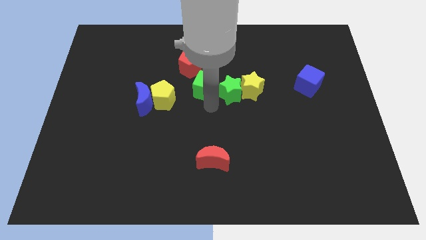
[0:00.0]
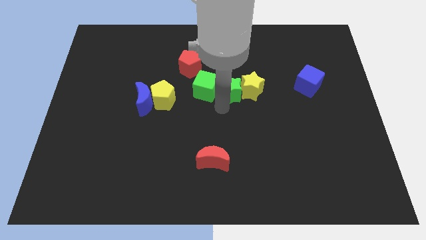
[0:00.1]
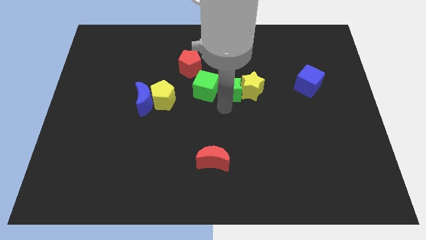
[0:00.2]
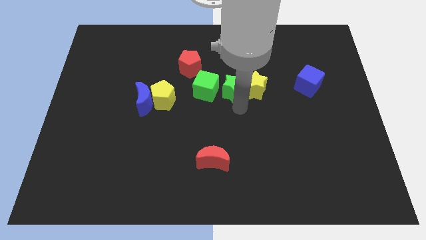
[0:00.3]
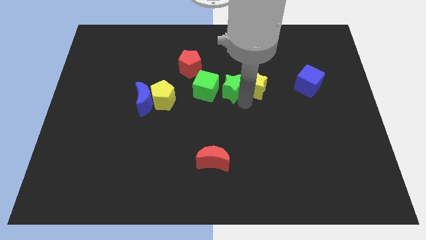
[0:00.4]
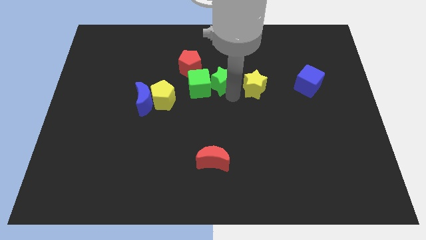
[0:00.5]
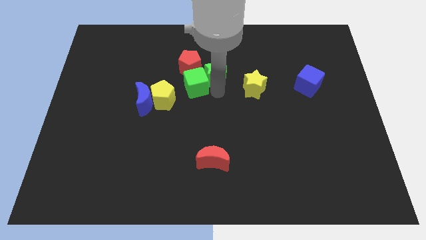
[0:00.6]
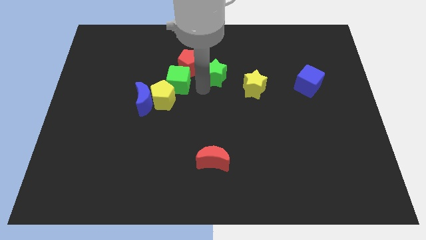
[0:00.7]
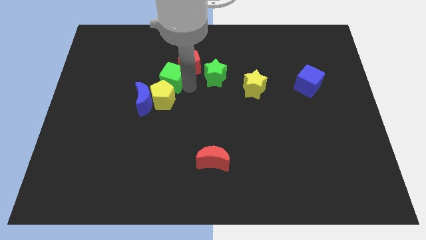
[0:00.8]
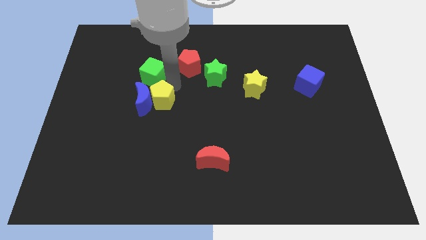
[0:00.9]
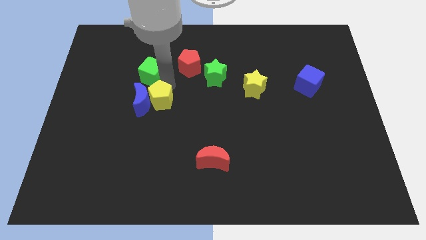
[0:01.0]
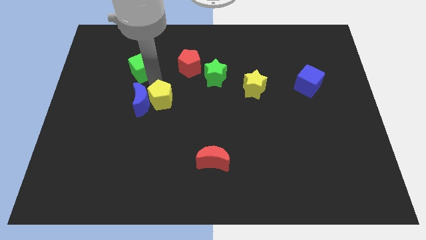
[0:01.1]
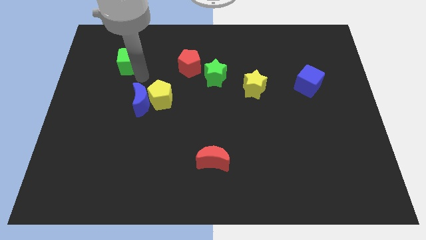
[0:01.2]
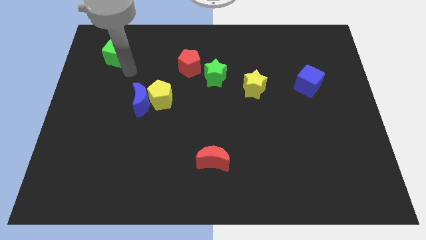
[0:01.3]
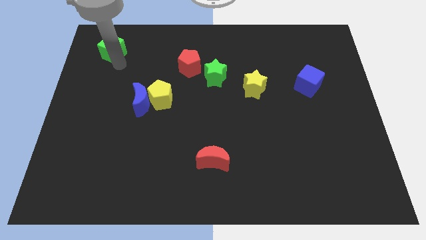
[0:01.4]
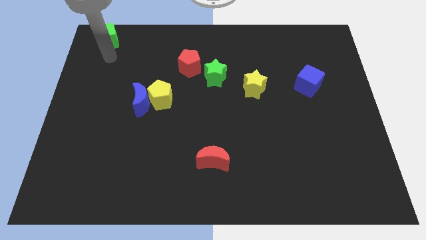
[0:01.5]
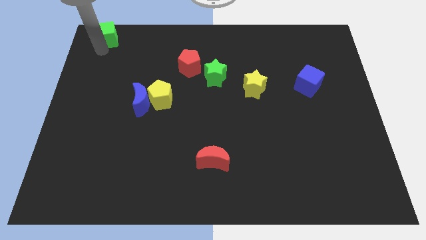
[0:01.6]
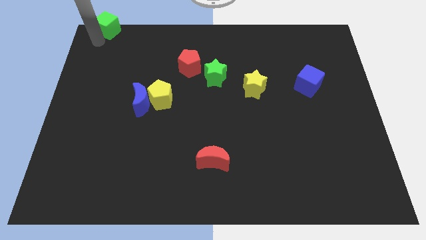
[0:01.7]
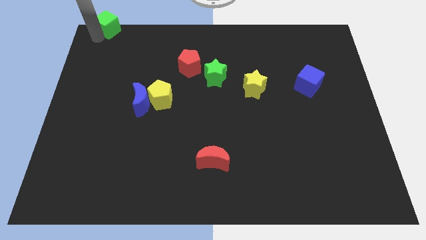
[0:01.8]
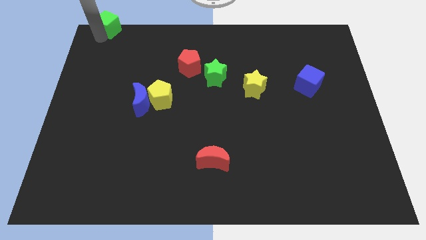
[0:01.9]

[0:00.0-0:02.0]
push the green cube towards the top left of the board

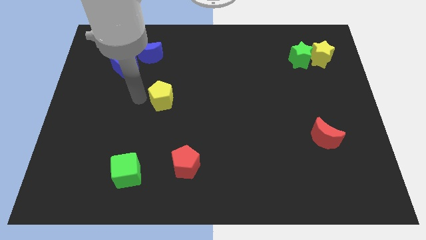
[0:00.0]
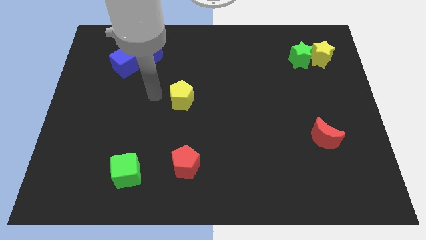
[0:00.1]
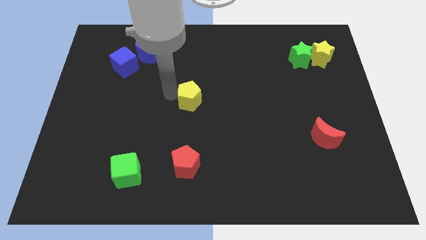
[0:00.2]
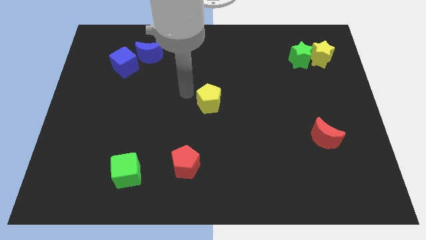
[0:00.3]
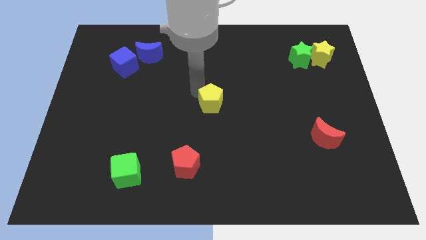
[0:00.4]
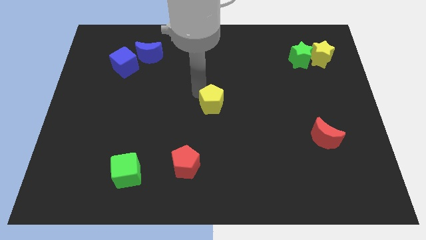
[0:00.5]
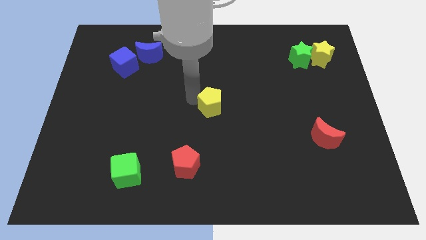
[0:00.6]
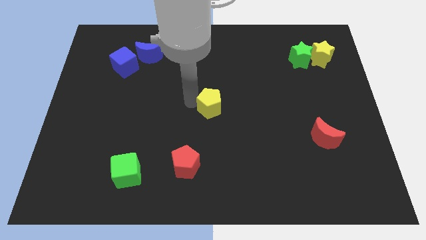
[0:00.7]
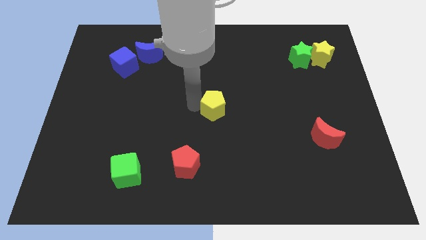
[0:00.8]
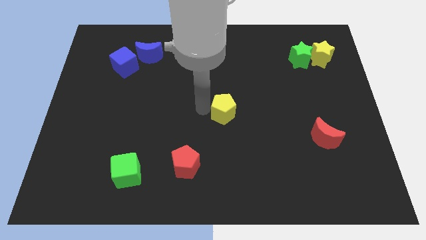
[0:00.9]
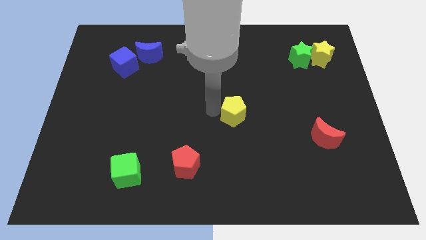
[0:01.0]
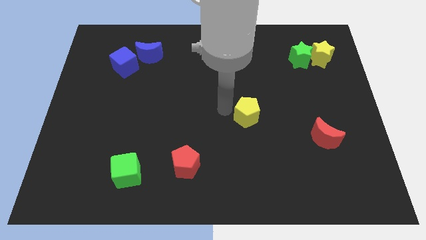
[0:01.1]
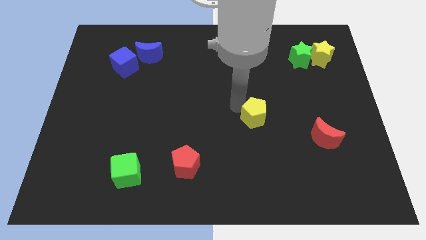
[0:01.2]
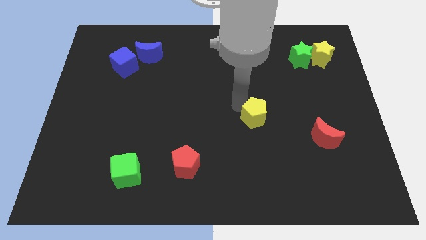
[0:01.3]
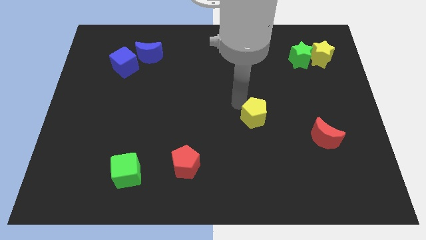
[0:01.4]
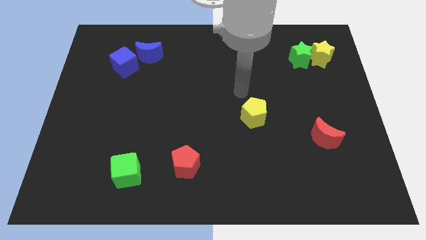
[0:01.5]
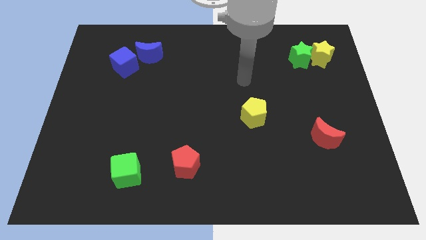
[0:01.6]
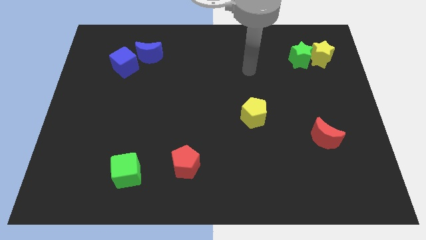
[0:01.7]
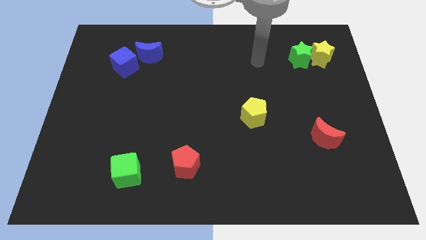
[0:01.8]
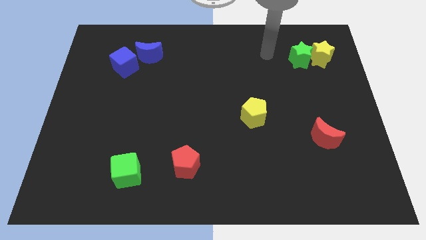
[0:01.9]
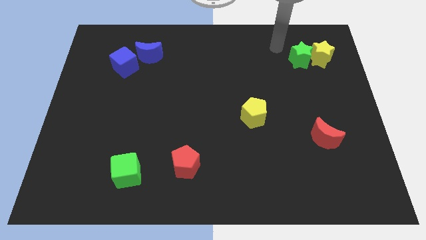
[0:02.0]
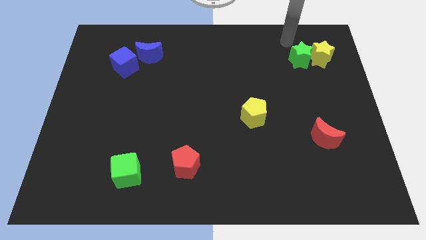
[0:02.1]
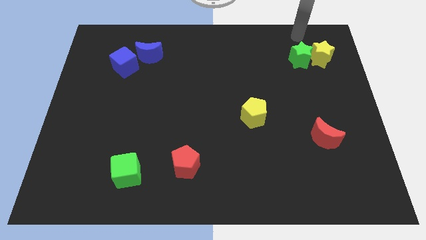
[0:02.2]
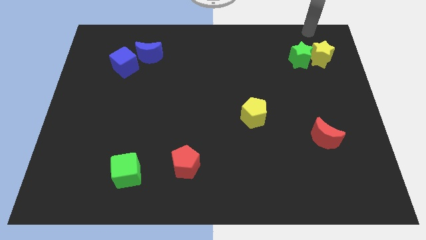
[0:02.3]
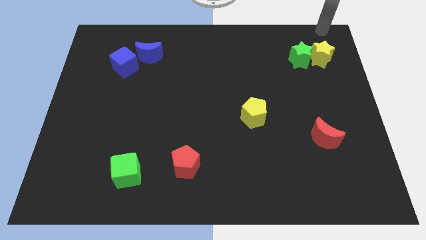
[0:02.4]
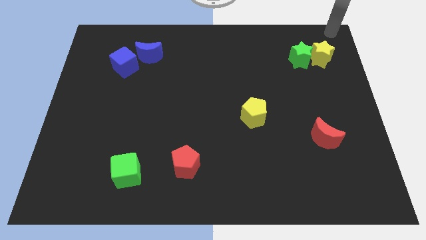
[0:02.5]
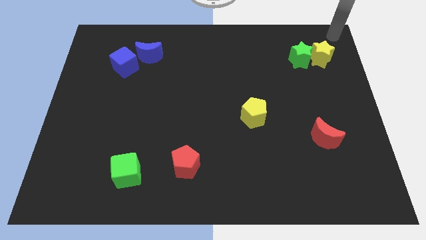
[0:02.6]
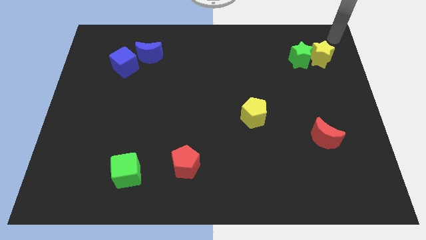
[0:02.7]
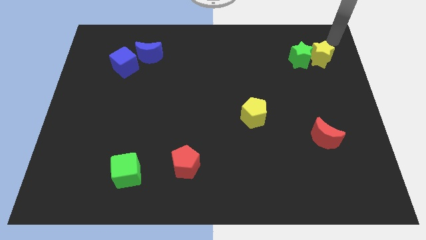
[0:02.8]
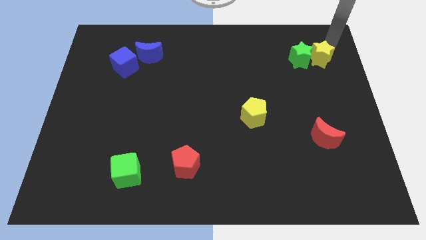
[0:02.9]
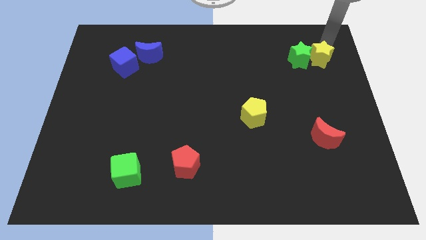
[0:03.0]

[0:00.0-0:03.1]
place the yellow pentagon in the center

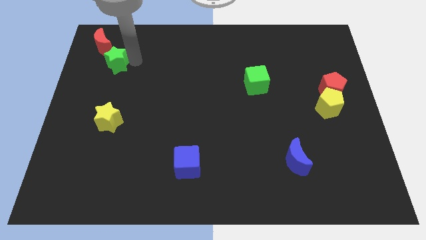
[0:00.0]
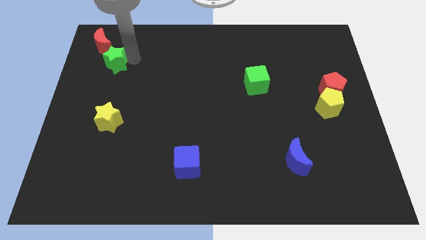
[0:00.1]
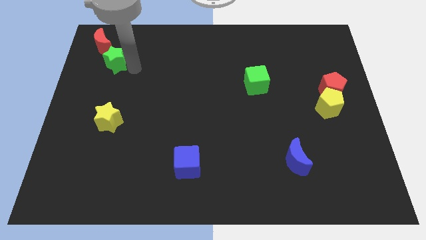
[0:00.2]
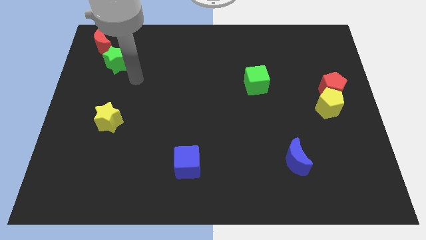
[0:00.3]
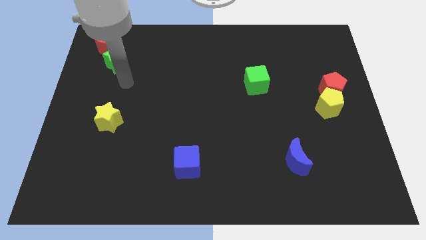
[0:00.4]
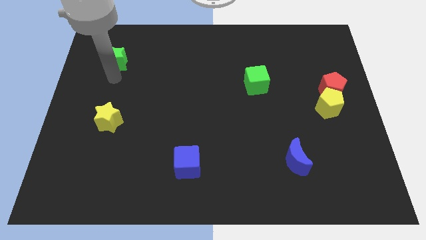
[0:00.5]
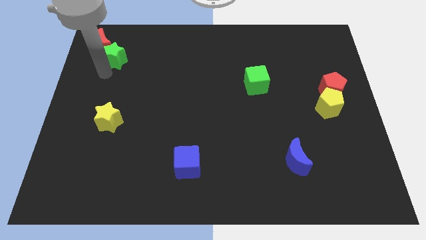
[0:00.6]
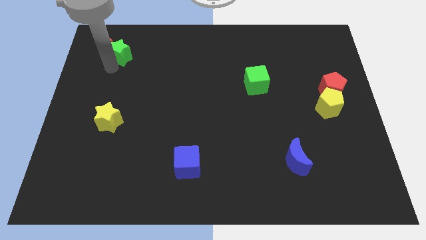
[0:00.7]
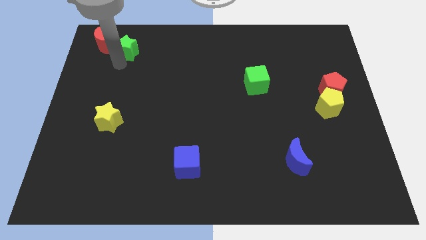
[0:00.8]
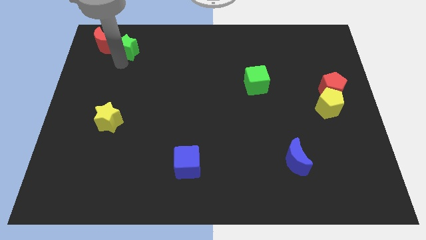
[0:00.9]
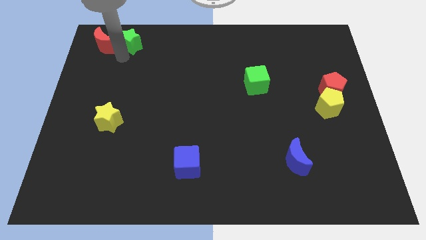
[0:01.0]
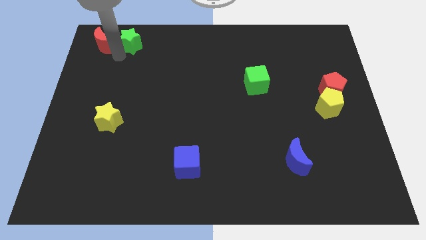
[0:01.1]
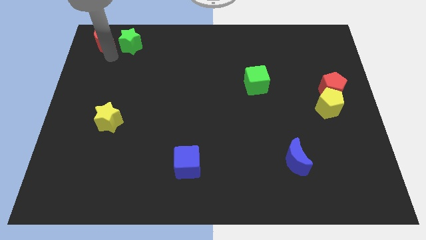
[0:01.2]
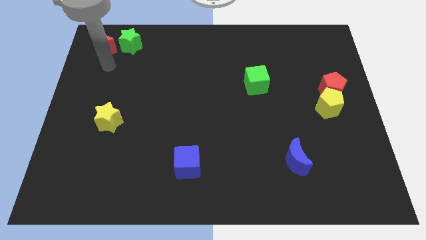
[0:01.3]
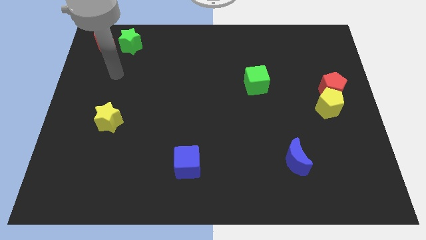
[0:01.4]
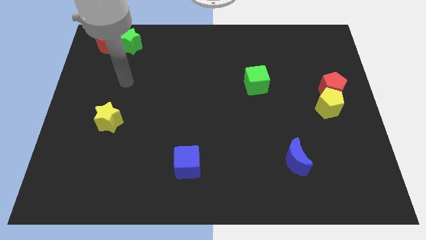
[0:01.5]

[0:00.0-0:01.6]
place the green star to the right of red moon

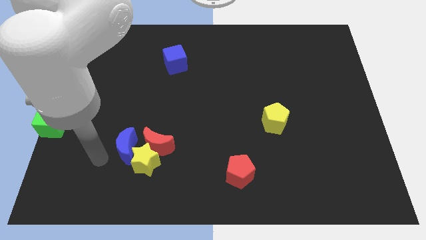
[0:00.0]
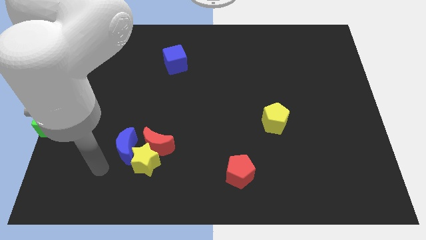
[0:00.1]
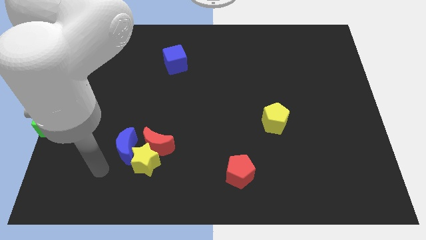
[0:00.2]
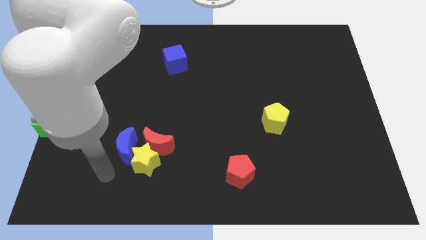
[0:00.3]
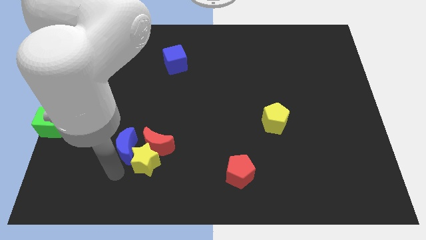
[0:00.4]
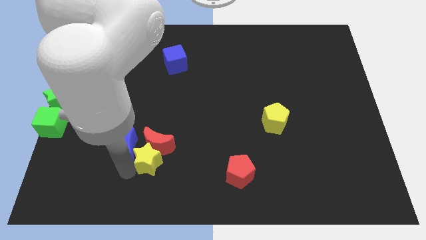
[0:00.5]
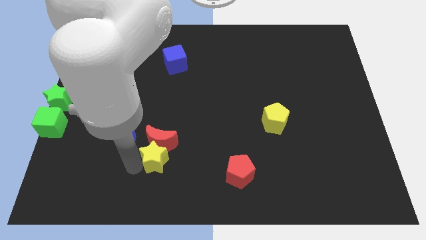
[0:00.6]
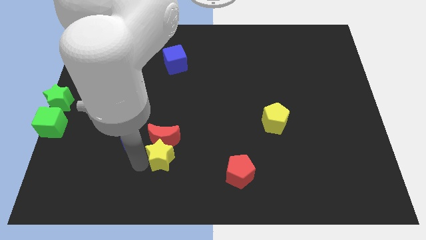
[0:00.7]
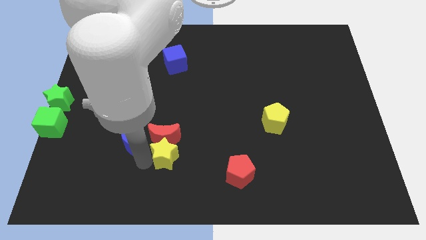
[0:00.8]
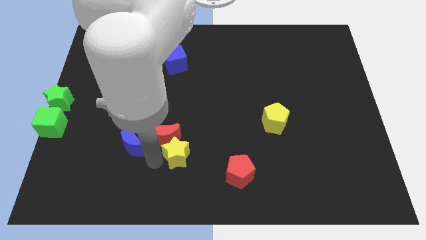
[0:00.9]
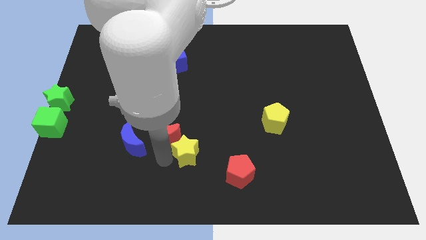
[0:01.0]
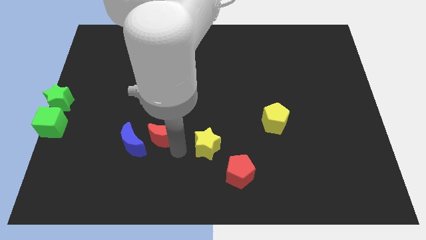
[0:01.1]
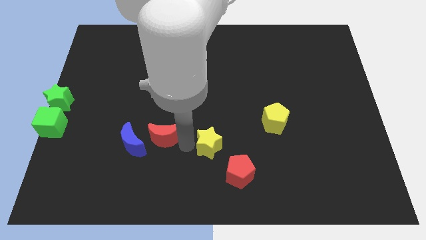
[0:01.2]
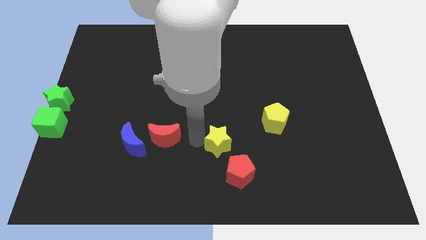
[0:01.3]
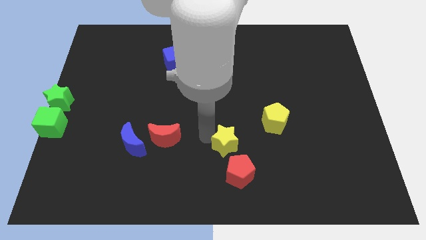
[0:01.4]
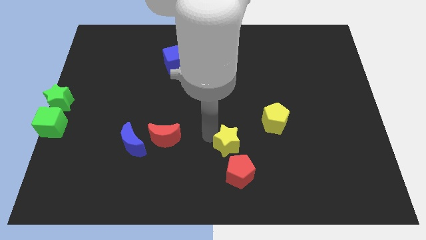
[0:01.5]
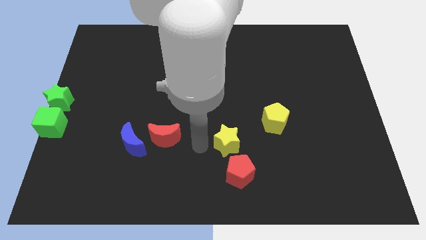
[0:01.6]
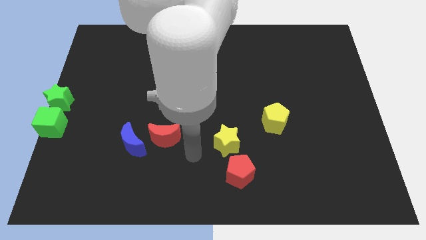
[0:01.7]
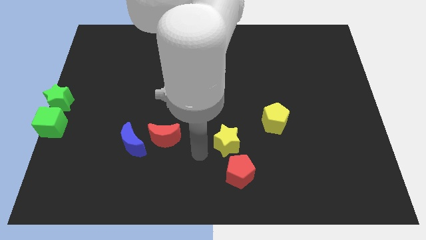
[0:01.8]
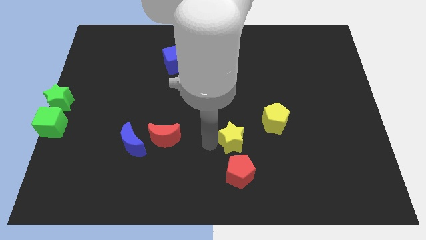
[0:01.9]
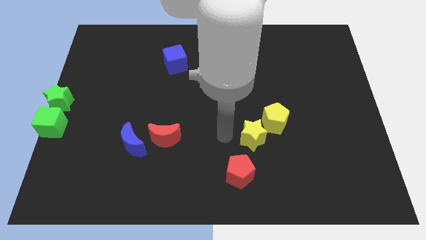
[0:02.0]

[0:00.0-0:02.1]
slide the yellow star into the yellow pentagon

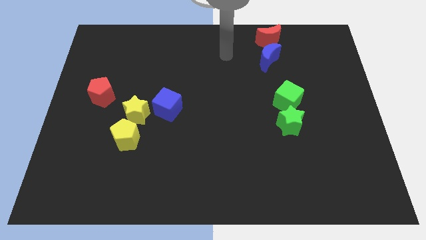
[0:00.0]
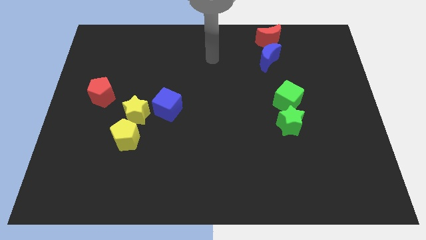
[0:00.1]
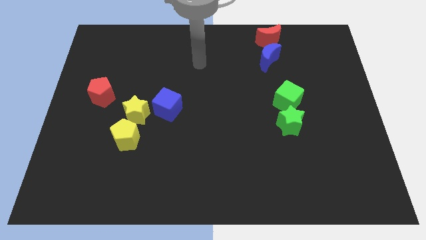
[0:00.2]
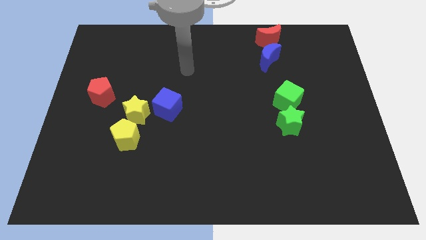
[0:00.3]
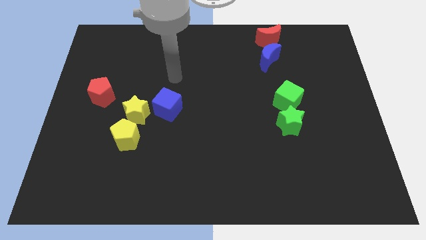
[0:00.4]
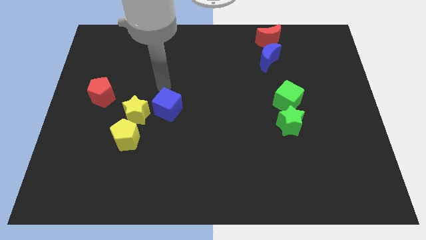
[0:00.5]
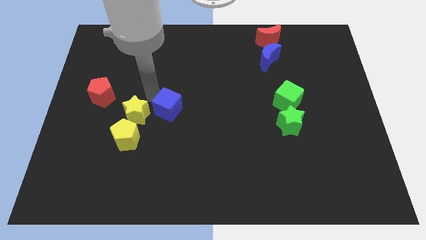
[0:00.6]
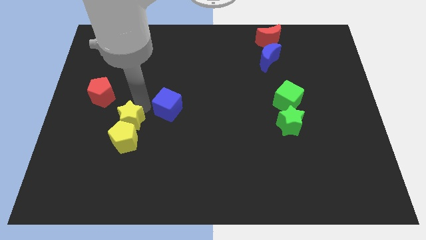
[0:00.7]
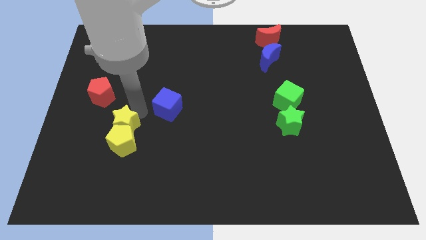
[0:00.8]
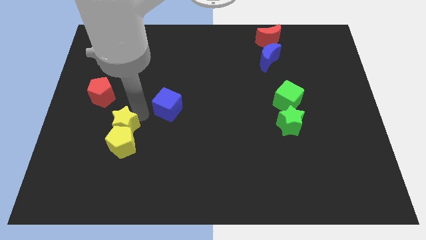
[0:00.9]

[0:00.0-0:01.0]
push the yellow star into yellow pentagon
